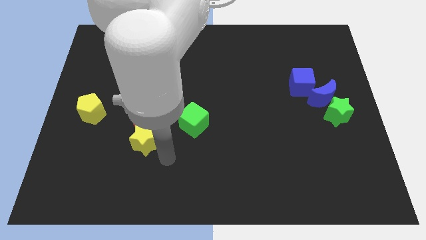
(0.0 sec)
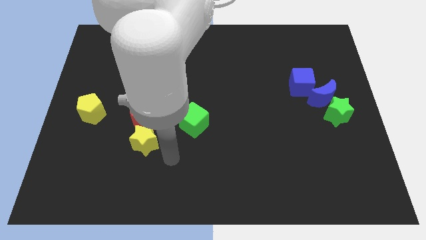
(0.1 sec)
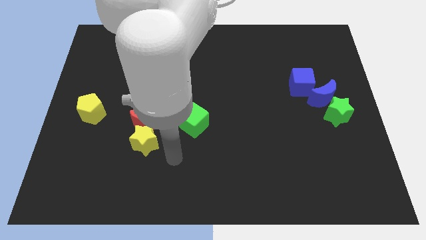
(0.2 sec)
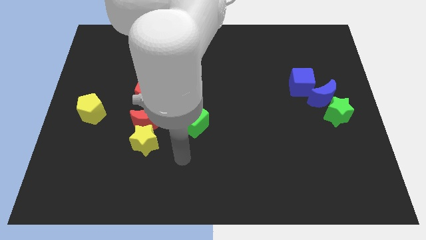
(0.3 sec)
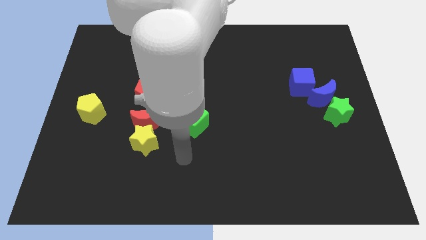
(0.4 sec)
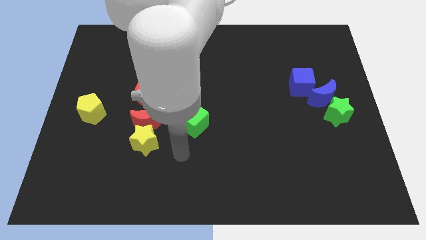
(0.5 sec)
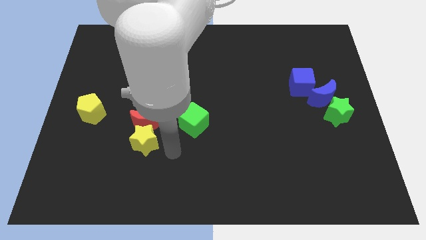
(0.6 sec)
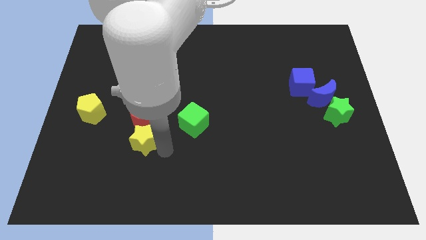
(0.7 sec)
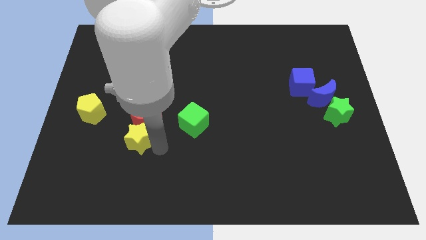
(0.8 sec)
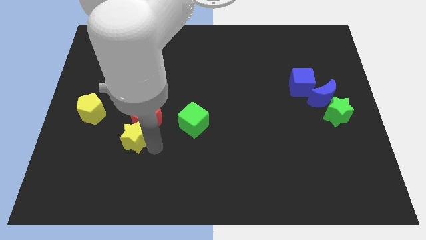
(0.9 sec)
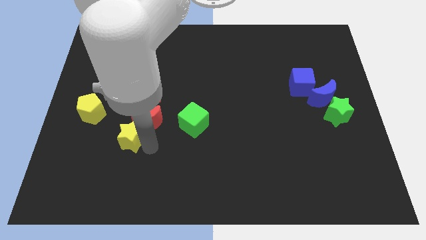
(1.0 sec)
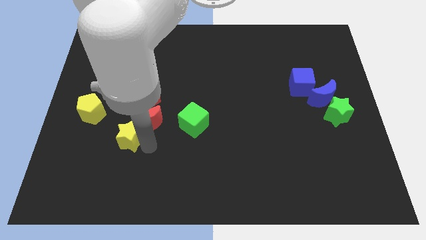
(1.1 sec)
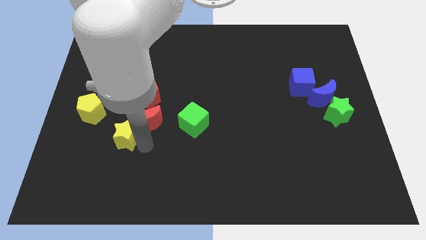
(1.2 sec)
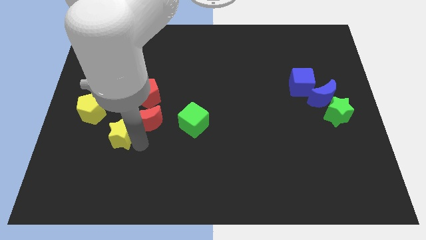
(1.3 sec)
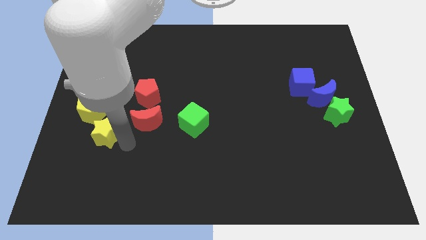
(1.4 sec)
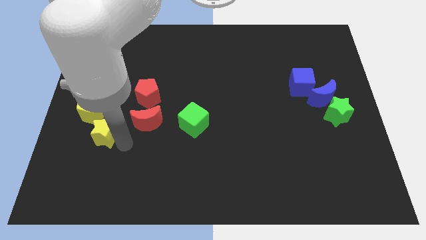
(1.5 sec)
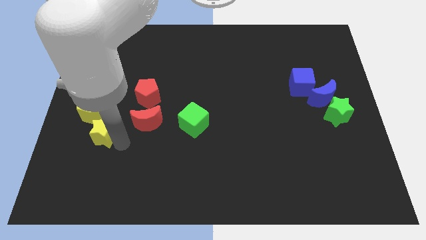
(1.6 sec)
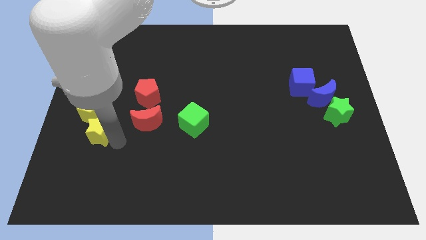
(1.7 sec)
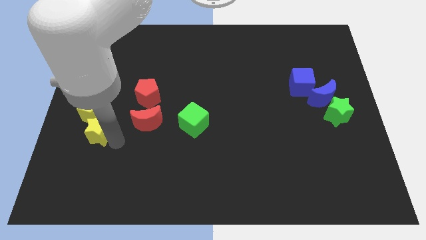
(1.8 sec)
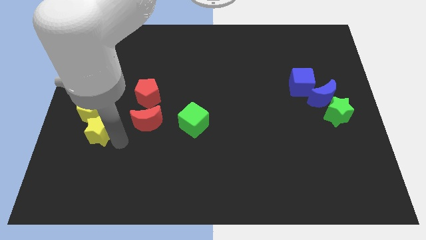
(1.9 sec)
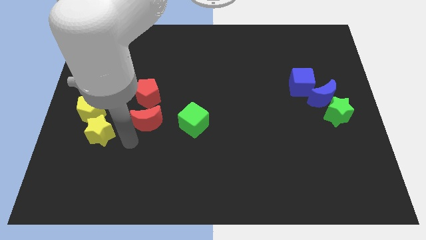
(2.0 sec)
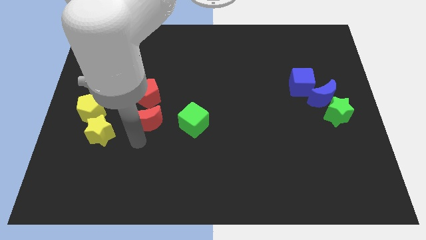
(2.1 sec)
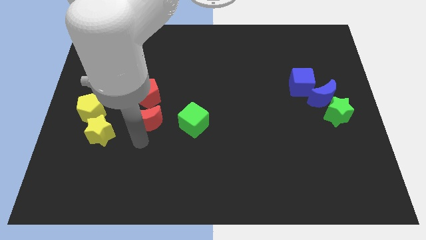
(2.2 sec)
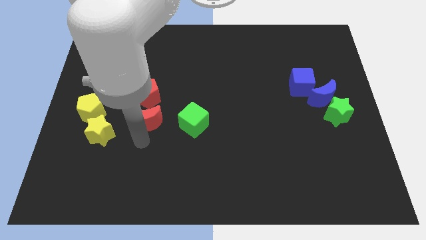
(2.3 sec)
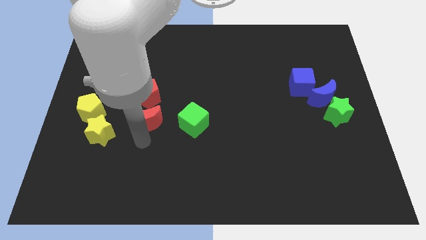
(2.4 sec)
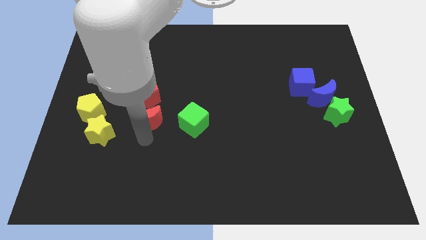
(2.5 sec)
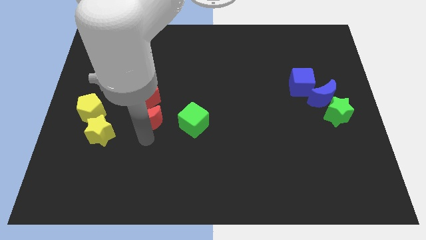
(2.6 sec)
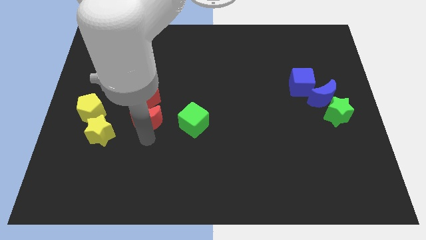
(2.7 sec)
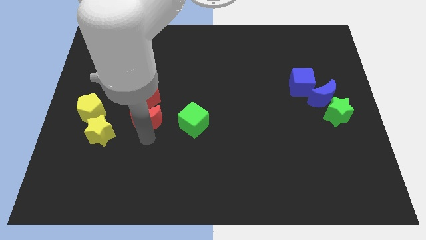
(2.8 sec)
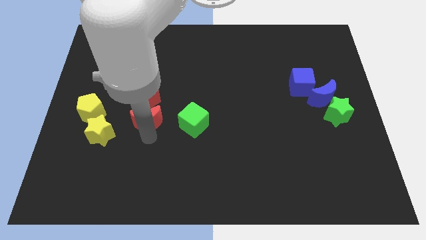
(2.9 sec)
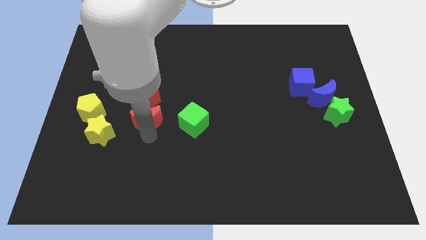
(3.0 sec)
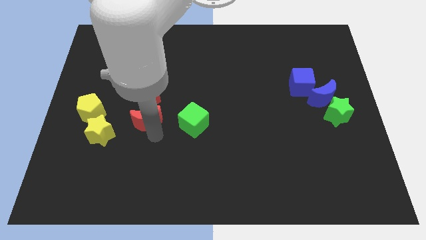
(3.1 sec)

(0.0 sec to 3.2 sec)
push the yellow star towards the bottom side of the yellow pentagon

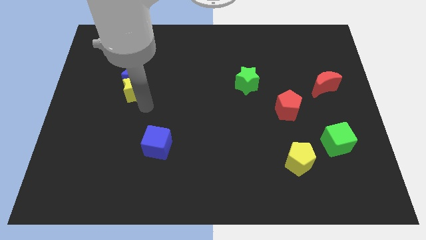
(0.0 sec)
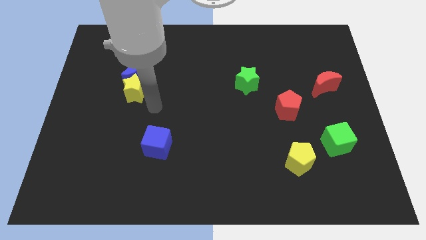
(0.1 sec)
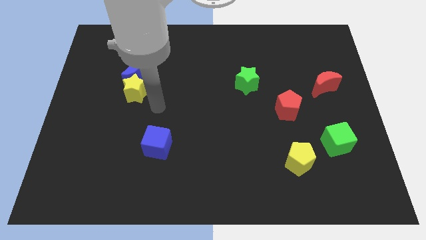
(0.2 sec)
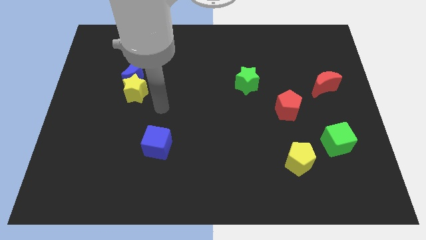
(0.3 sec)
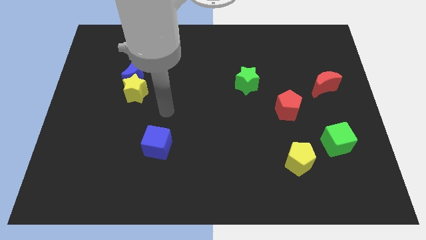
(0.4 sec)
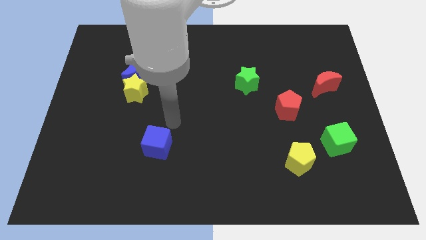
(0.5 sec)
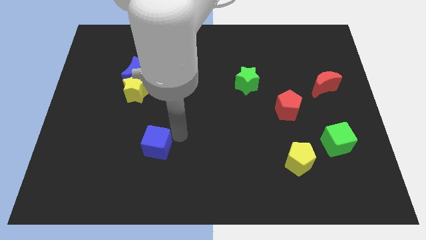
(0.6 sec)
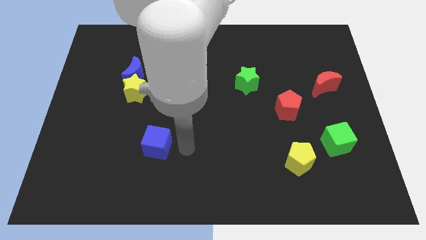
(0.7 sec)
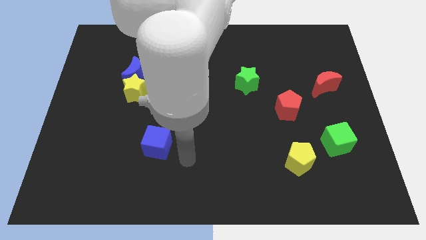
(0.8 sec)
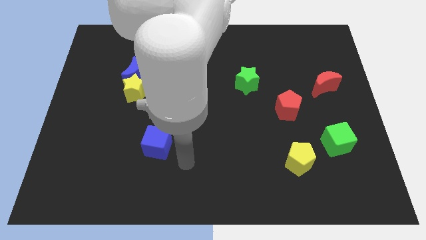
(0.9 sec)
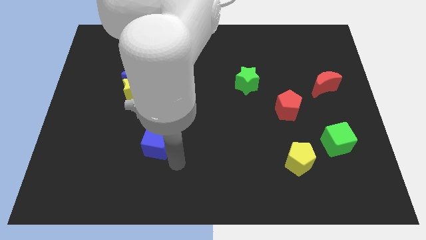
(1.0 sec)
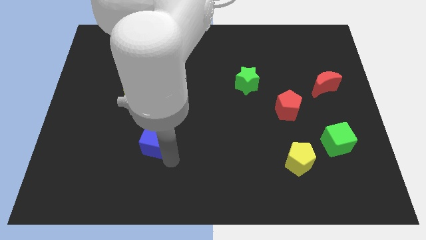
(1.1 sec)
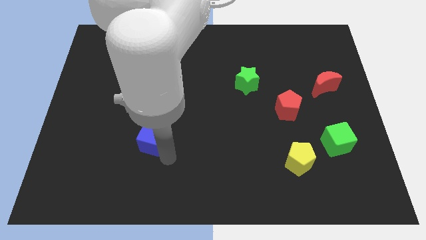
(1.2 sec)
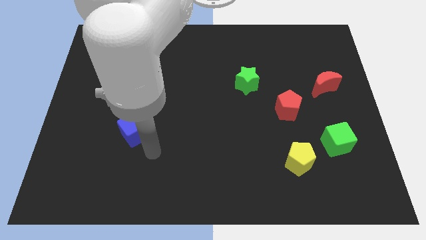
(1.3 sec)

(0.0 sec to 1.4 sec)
move your arm at the bottom of the blue cube

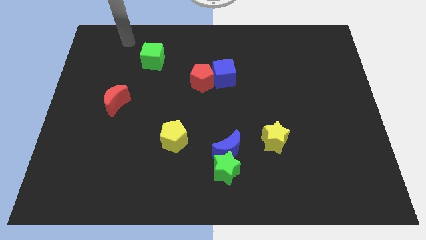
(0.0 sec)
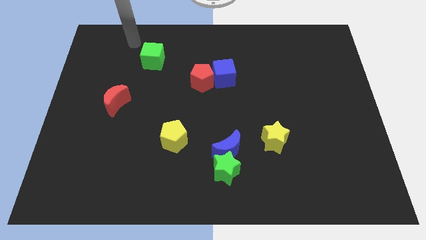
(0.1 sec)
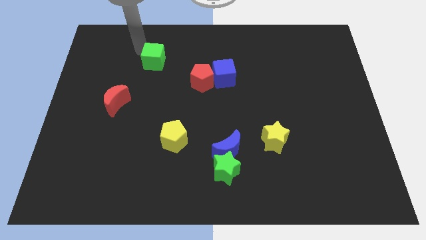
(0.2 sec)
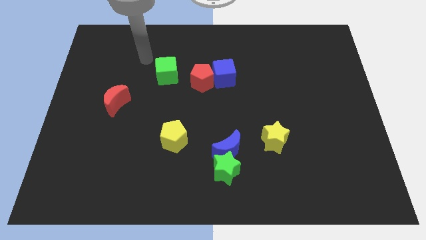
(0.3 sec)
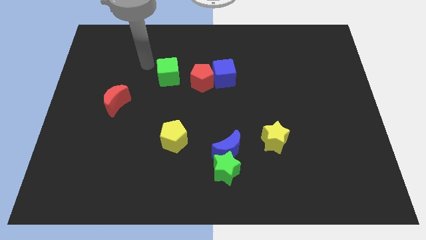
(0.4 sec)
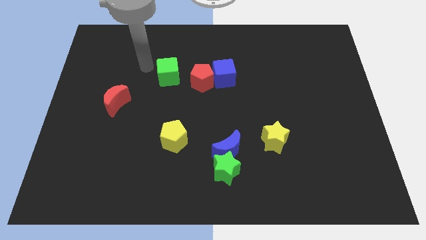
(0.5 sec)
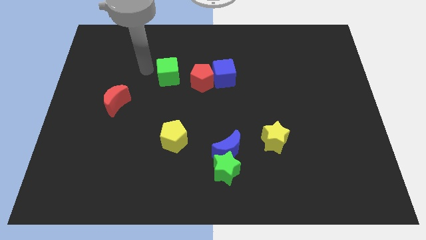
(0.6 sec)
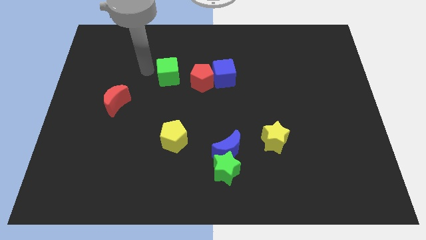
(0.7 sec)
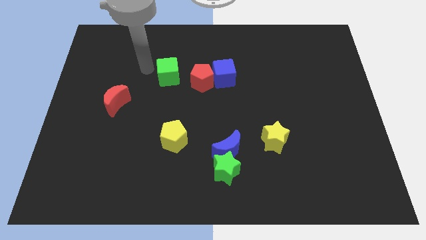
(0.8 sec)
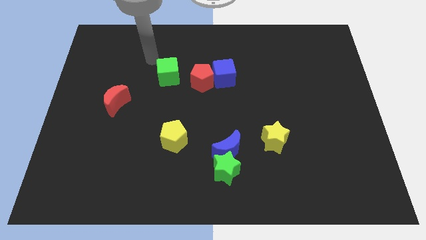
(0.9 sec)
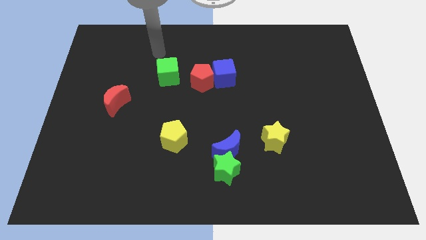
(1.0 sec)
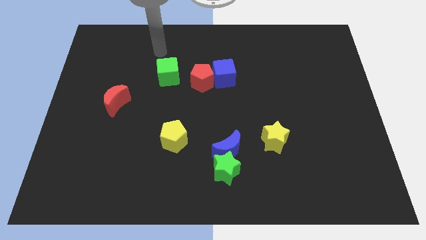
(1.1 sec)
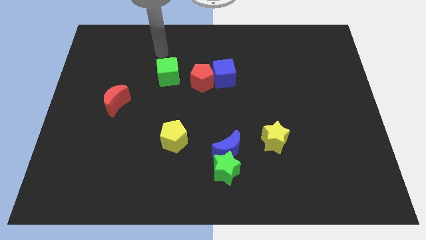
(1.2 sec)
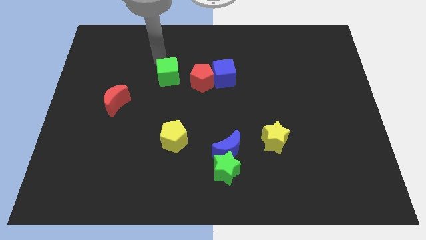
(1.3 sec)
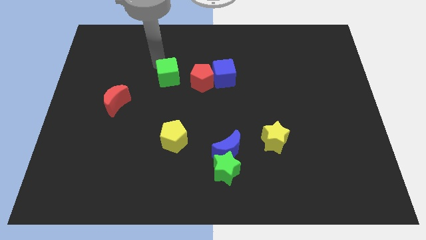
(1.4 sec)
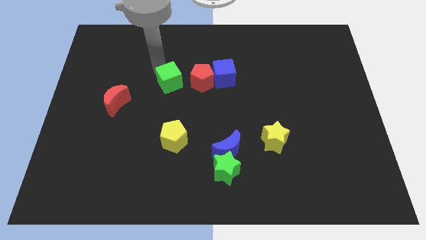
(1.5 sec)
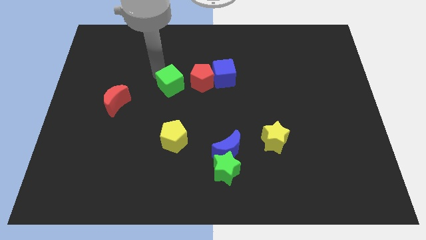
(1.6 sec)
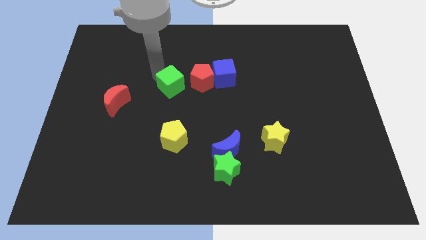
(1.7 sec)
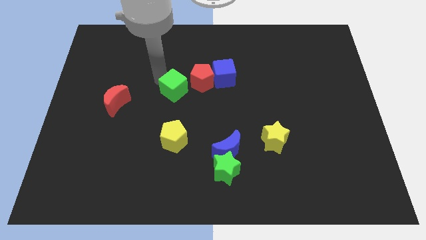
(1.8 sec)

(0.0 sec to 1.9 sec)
push the green cube towards the yellow pentagon

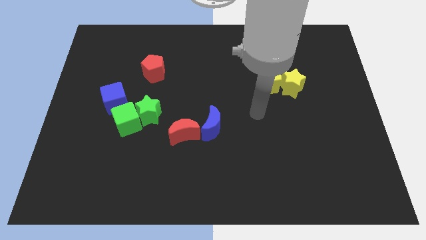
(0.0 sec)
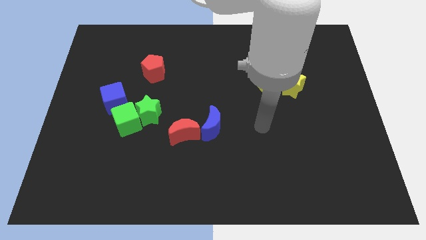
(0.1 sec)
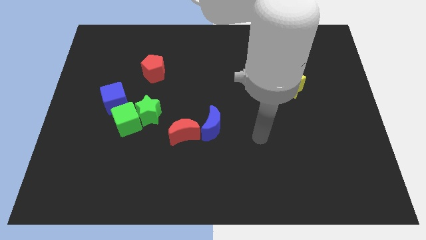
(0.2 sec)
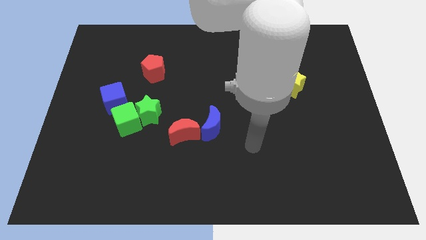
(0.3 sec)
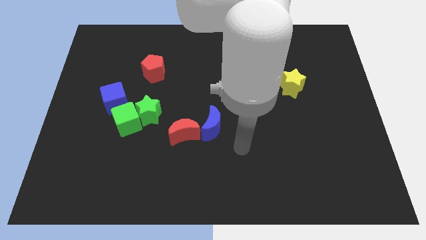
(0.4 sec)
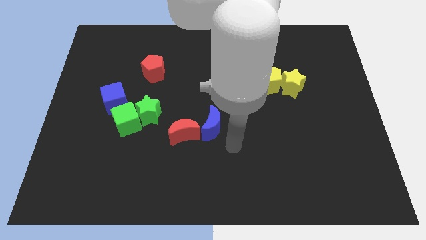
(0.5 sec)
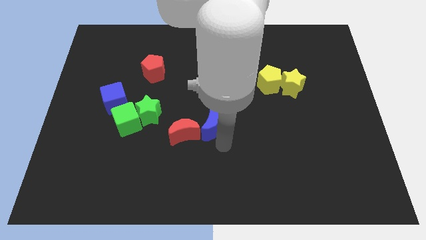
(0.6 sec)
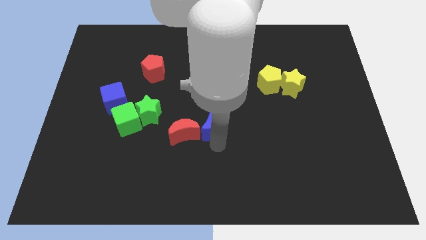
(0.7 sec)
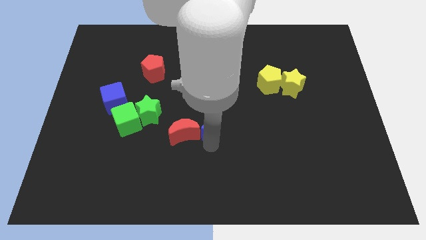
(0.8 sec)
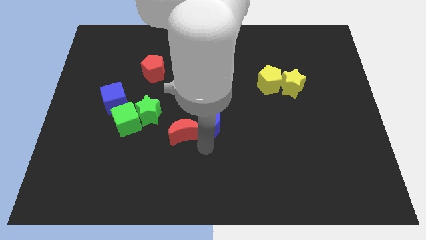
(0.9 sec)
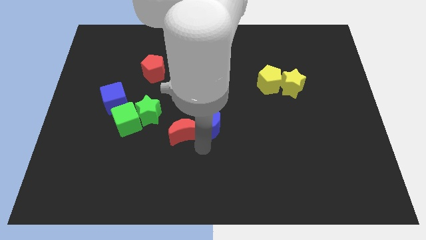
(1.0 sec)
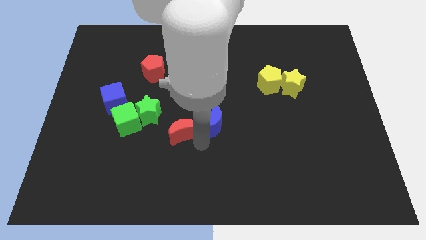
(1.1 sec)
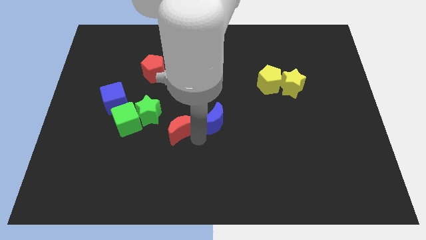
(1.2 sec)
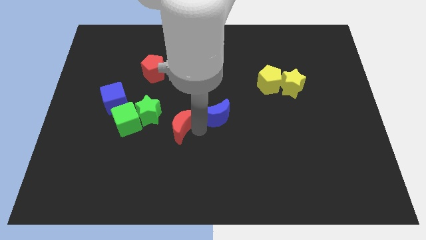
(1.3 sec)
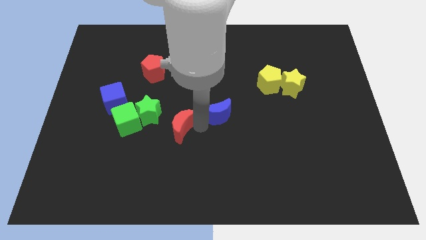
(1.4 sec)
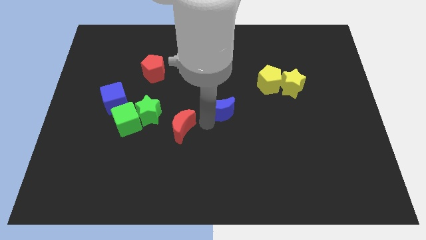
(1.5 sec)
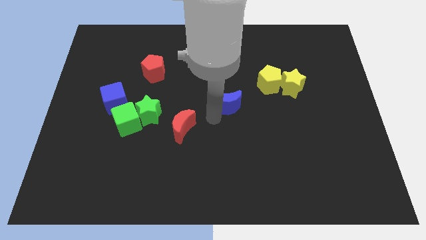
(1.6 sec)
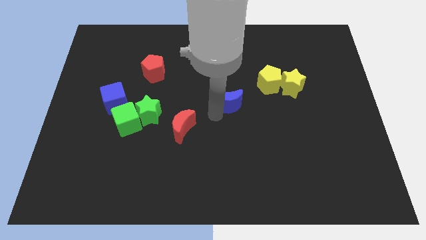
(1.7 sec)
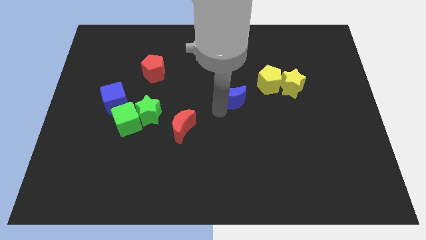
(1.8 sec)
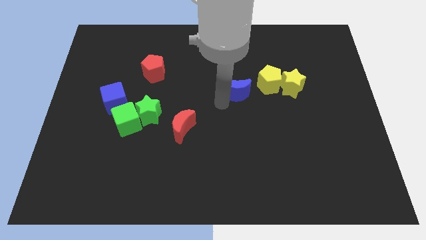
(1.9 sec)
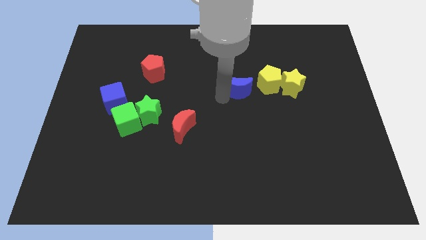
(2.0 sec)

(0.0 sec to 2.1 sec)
separate blue moon from red moon

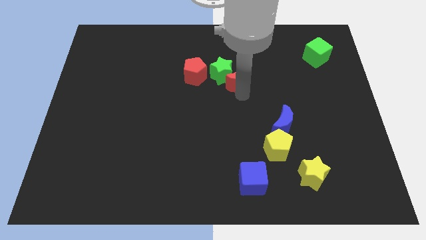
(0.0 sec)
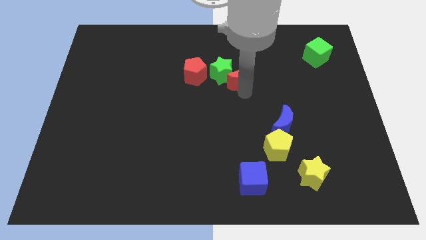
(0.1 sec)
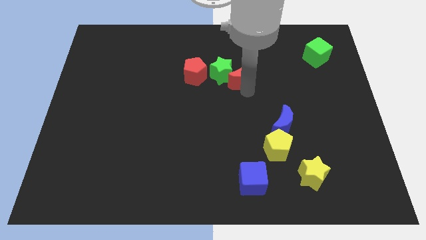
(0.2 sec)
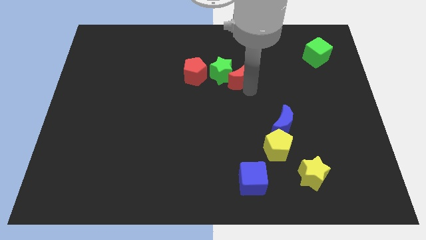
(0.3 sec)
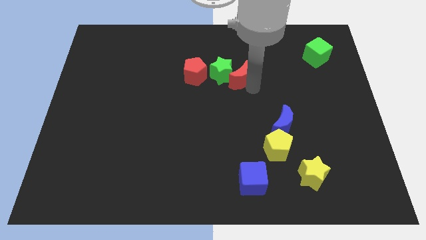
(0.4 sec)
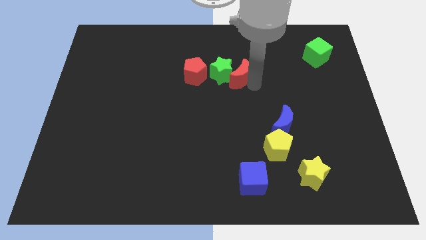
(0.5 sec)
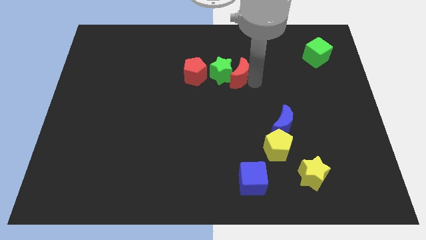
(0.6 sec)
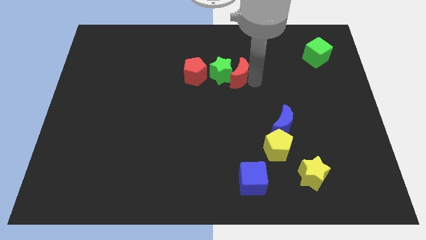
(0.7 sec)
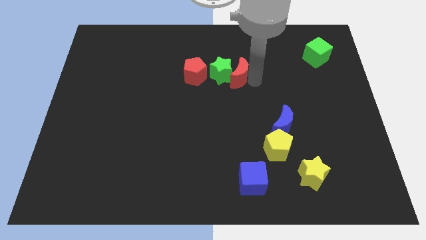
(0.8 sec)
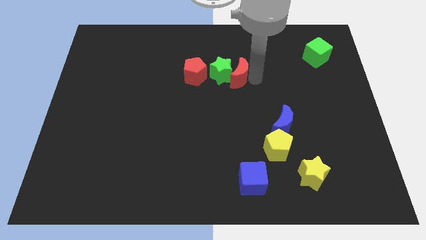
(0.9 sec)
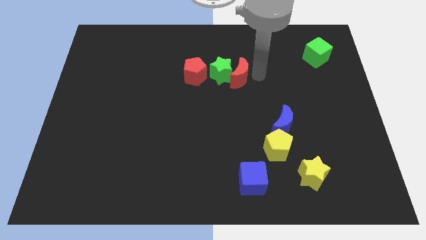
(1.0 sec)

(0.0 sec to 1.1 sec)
move the red crescent to the right side of the green star
